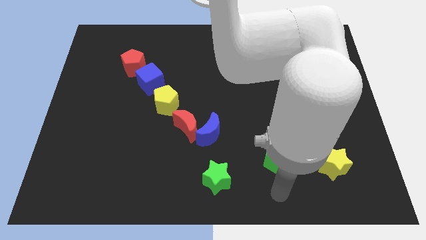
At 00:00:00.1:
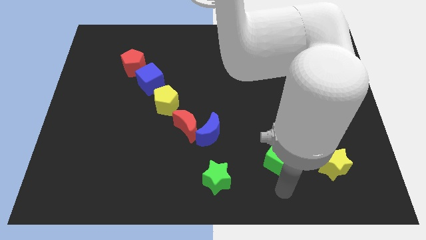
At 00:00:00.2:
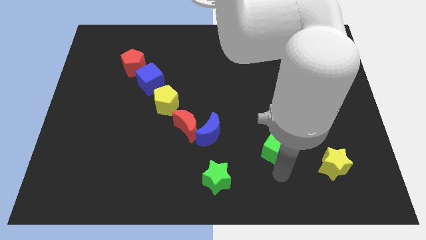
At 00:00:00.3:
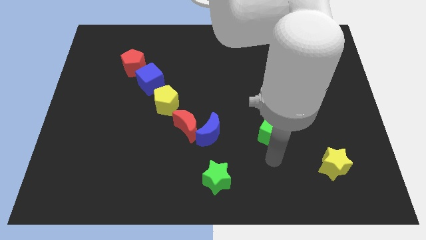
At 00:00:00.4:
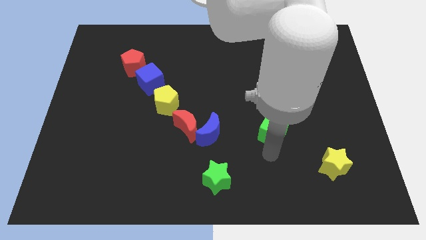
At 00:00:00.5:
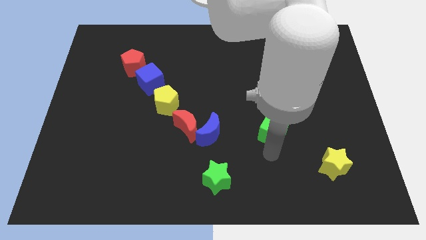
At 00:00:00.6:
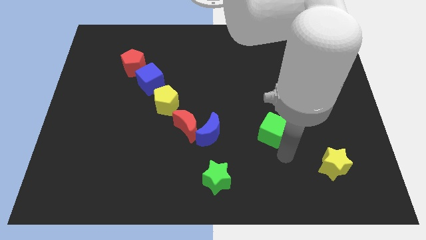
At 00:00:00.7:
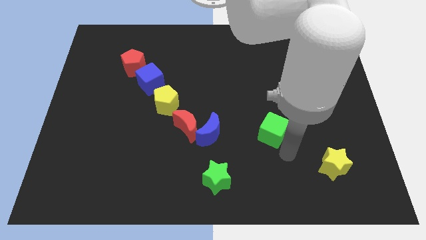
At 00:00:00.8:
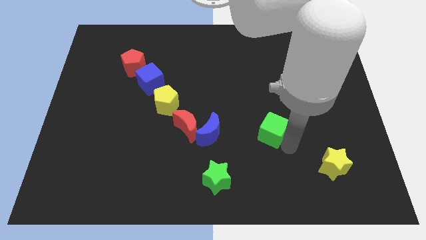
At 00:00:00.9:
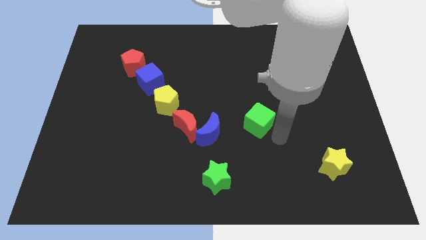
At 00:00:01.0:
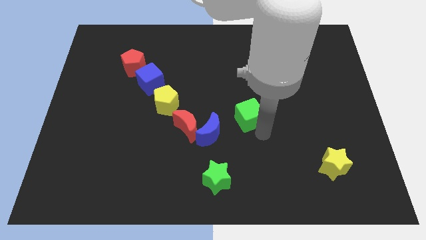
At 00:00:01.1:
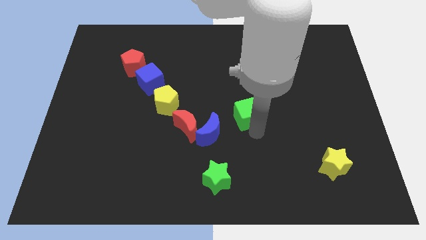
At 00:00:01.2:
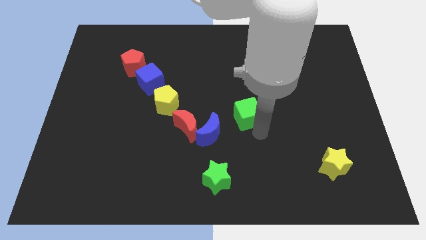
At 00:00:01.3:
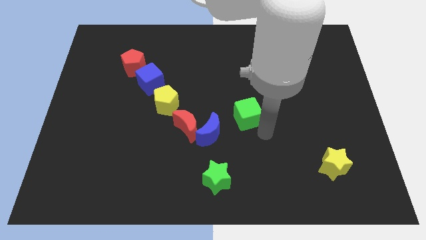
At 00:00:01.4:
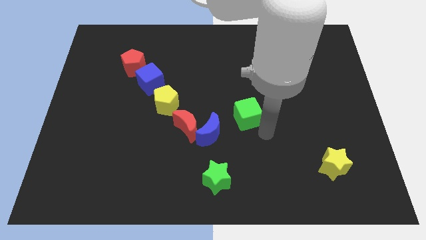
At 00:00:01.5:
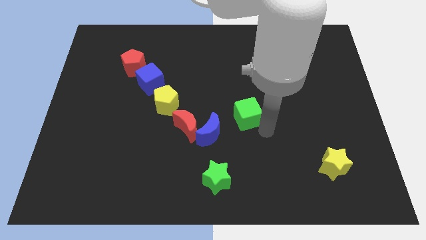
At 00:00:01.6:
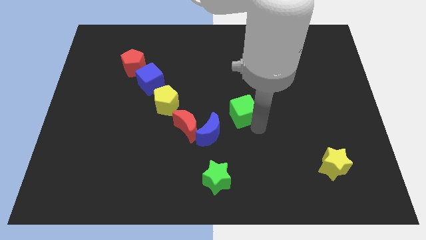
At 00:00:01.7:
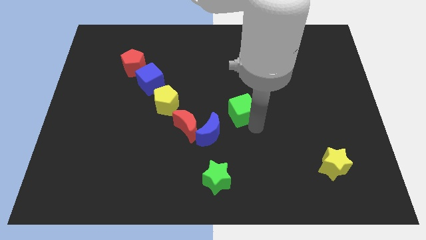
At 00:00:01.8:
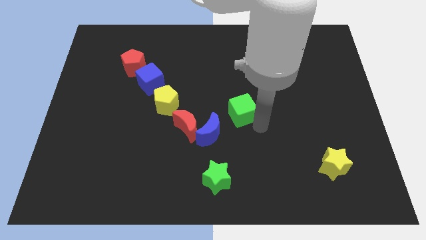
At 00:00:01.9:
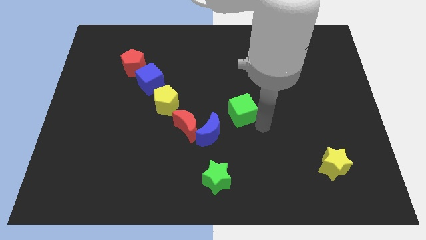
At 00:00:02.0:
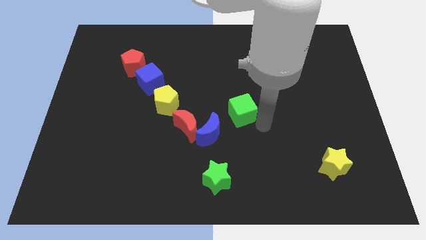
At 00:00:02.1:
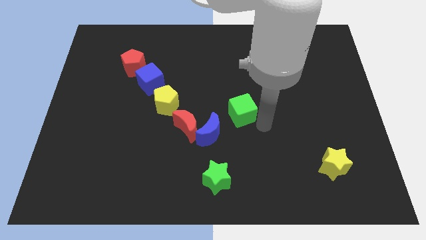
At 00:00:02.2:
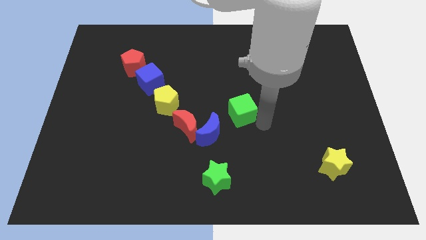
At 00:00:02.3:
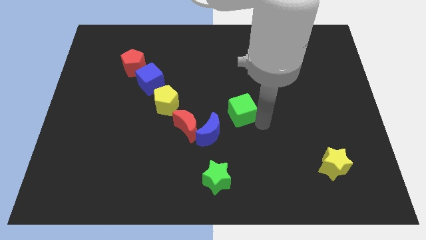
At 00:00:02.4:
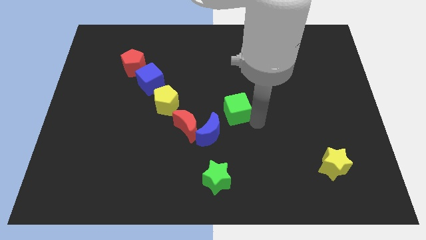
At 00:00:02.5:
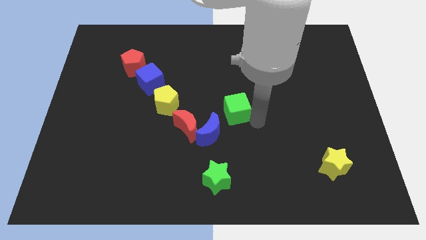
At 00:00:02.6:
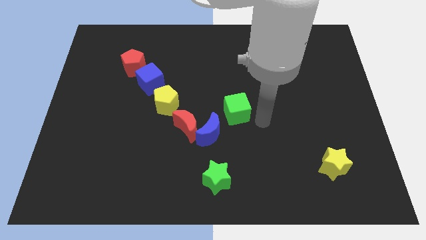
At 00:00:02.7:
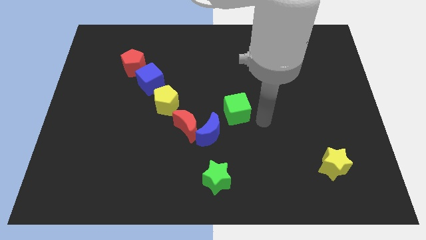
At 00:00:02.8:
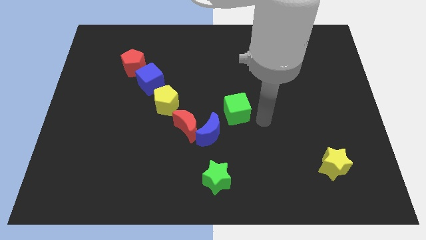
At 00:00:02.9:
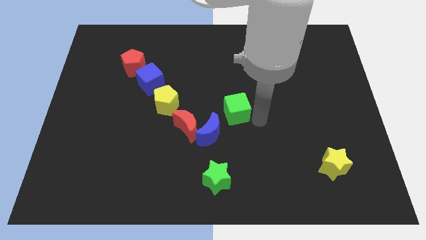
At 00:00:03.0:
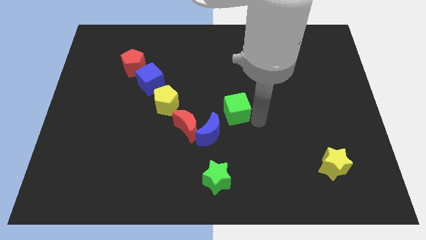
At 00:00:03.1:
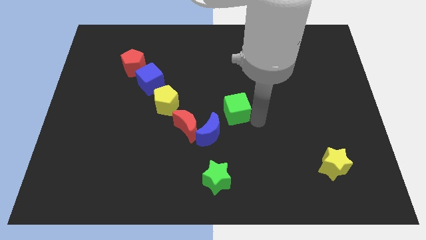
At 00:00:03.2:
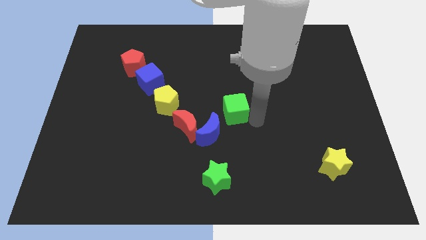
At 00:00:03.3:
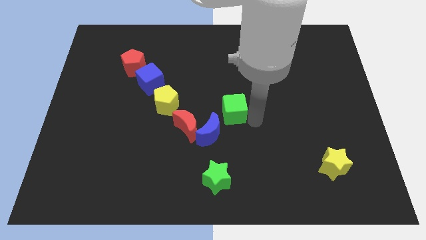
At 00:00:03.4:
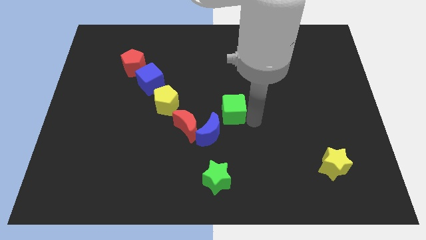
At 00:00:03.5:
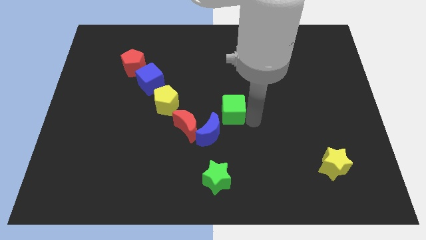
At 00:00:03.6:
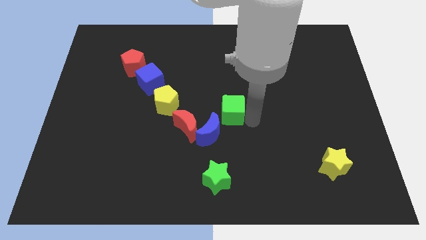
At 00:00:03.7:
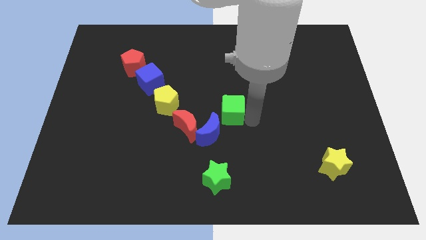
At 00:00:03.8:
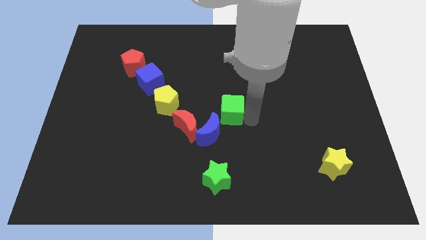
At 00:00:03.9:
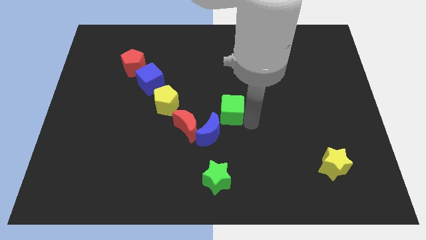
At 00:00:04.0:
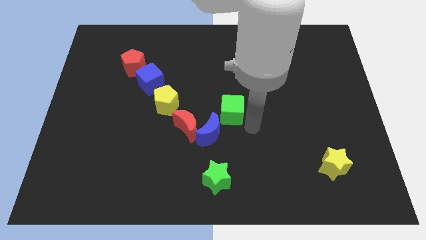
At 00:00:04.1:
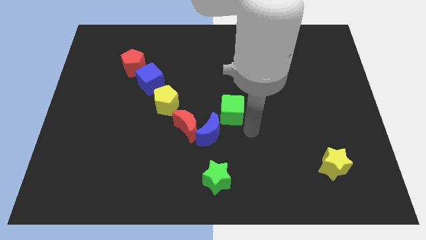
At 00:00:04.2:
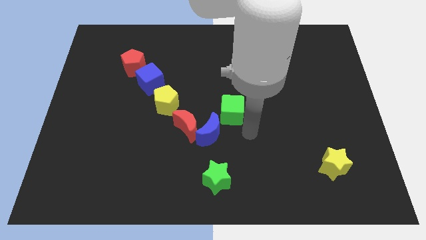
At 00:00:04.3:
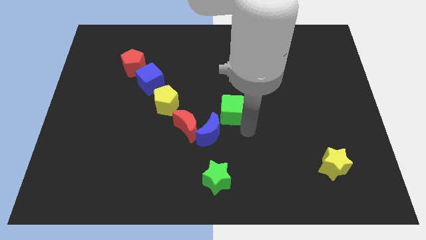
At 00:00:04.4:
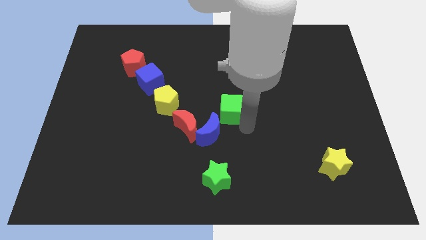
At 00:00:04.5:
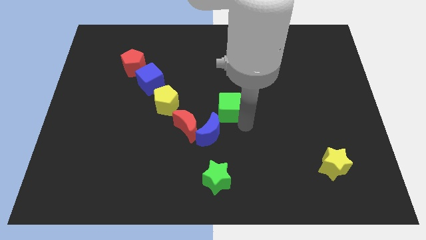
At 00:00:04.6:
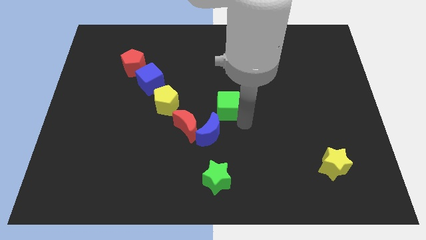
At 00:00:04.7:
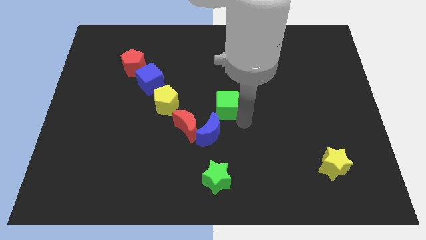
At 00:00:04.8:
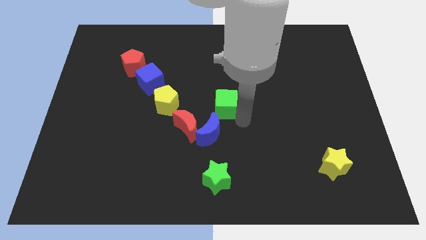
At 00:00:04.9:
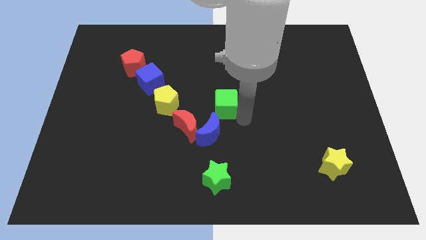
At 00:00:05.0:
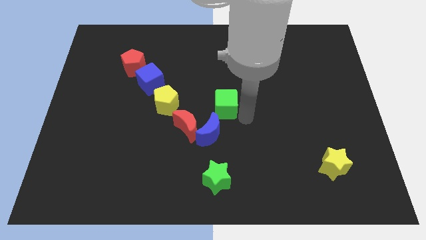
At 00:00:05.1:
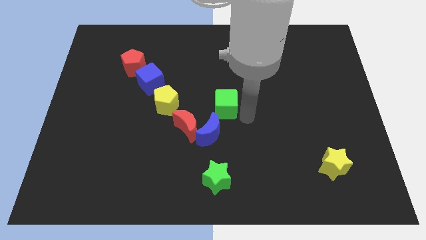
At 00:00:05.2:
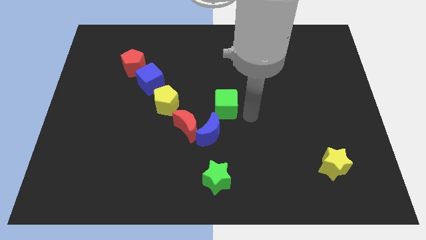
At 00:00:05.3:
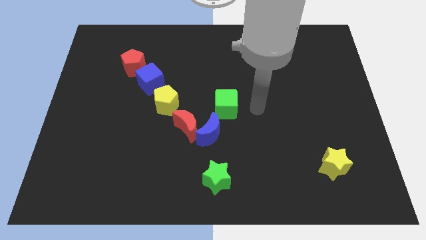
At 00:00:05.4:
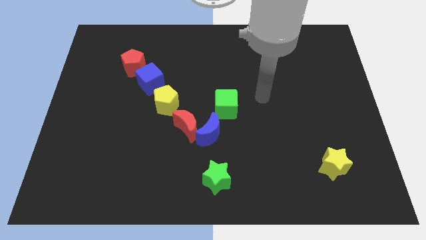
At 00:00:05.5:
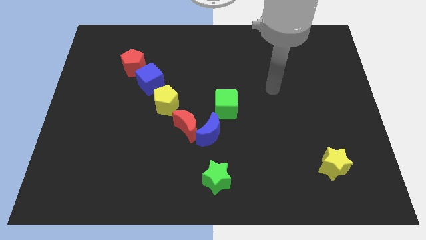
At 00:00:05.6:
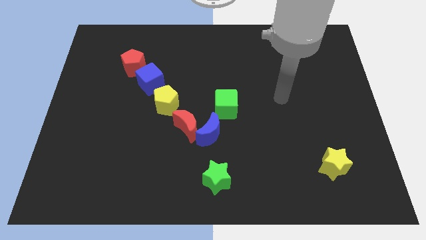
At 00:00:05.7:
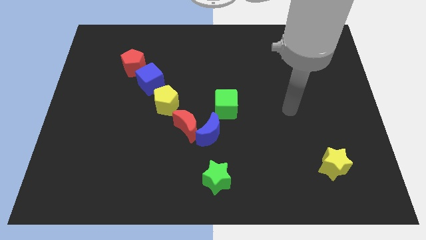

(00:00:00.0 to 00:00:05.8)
place blue cube to one of the end of blue crescent

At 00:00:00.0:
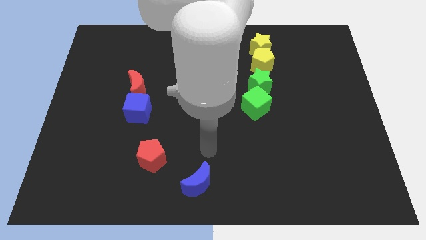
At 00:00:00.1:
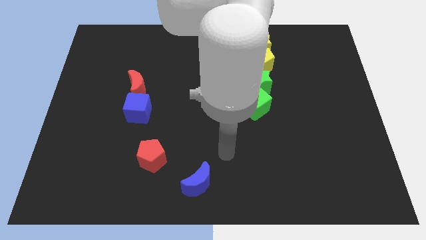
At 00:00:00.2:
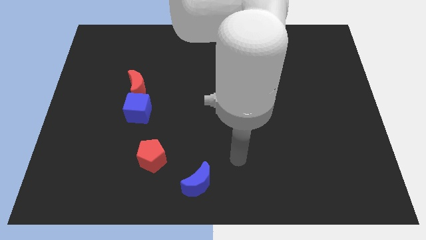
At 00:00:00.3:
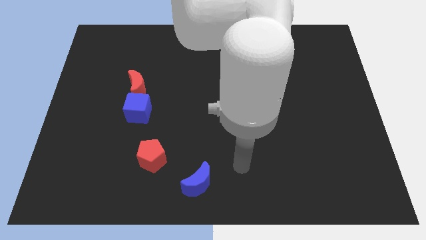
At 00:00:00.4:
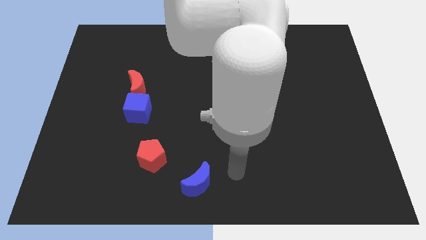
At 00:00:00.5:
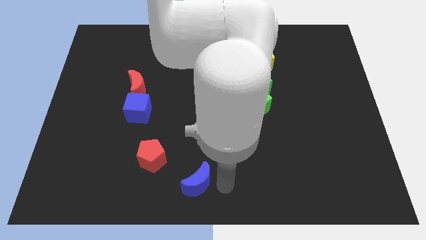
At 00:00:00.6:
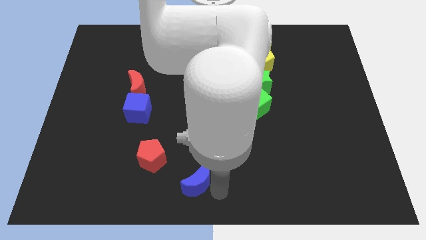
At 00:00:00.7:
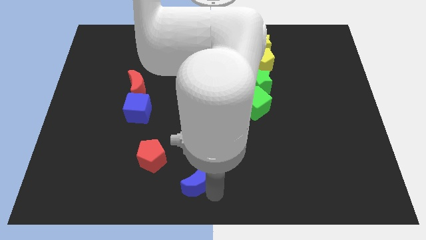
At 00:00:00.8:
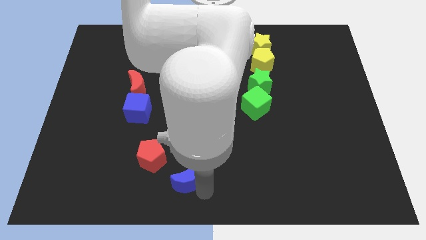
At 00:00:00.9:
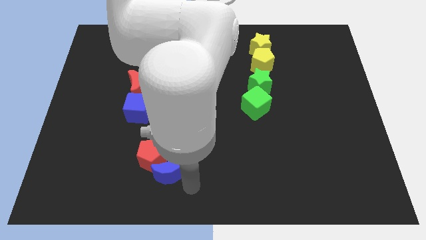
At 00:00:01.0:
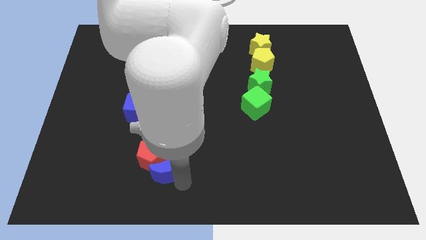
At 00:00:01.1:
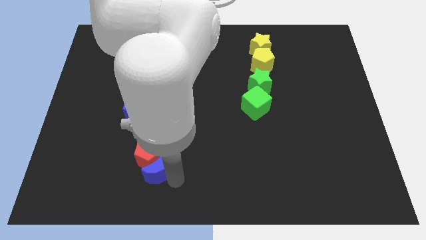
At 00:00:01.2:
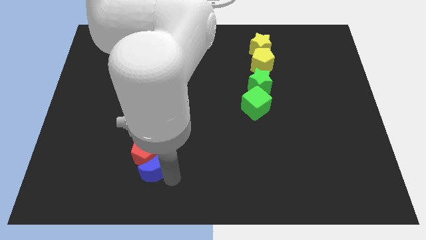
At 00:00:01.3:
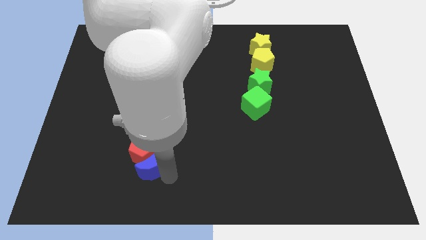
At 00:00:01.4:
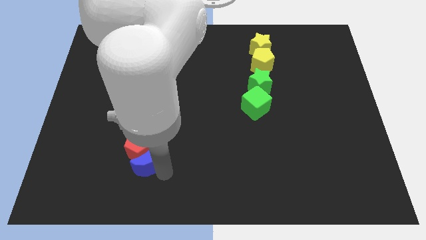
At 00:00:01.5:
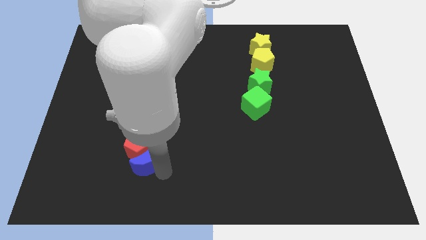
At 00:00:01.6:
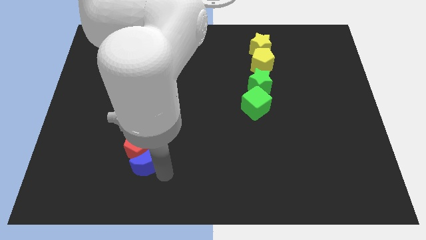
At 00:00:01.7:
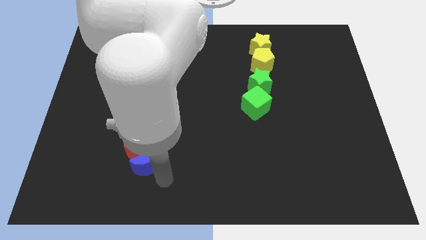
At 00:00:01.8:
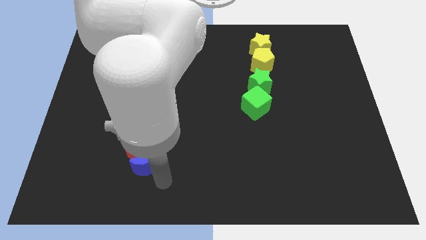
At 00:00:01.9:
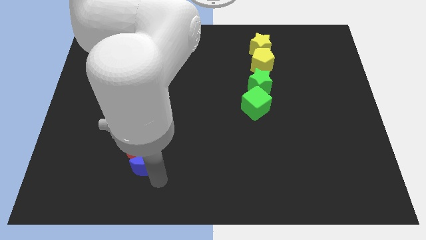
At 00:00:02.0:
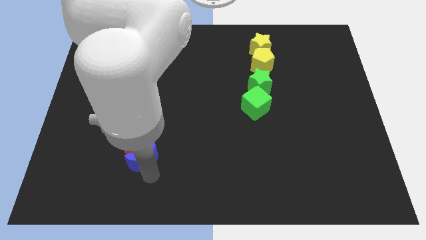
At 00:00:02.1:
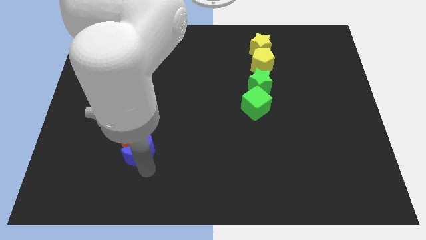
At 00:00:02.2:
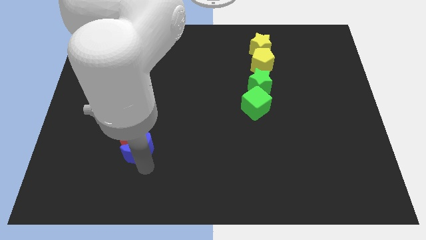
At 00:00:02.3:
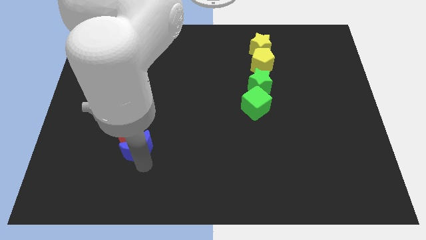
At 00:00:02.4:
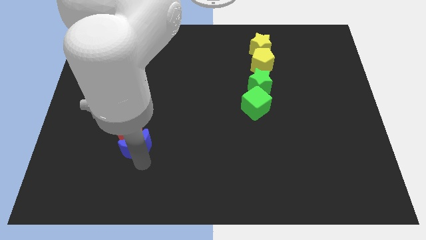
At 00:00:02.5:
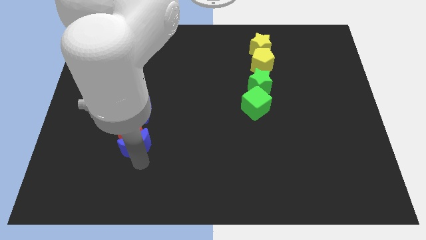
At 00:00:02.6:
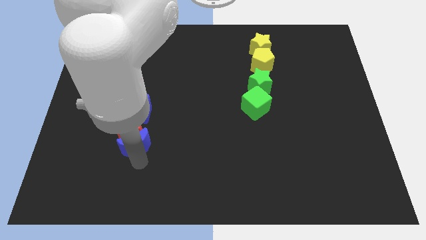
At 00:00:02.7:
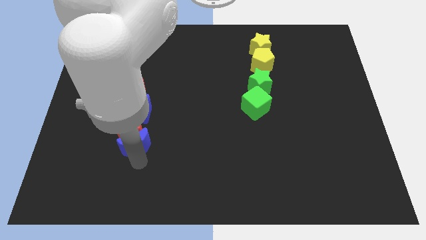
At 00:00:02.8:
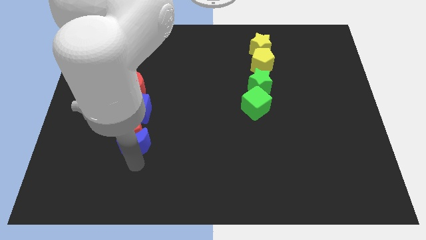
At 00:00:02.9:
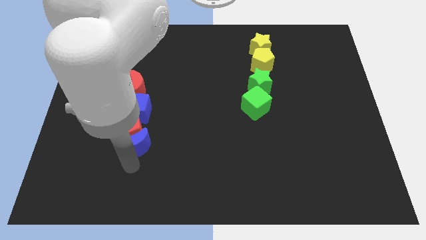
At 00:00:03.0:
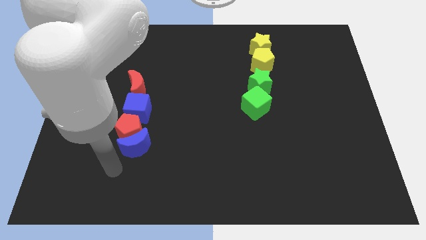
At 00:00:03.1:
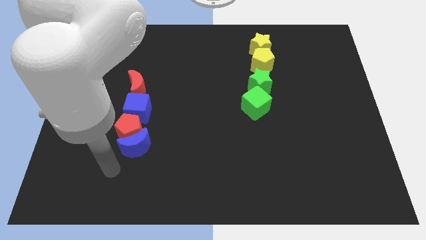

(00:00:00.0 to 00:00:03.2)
line up red and blue blocks vertically

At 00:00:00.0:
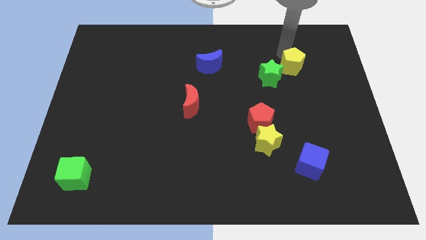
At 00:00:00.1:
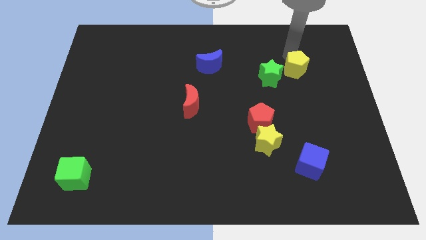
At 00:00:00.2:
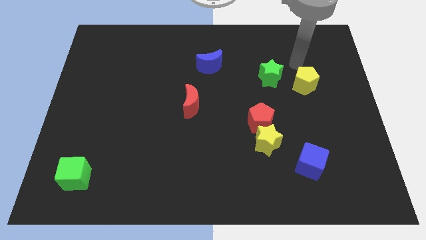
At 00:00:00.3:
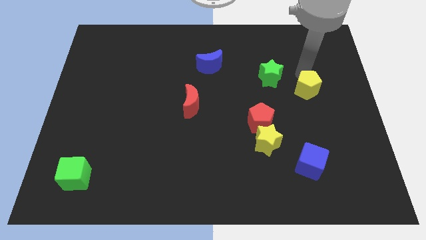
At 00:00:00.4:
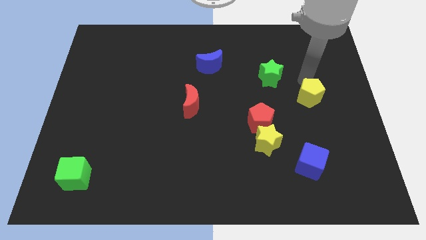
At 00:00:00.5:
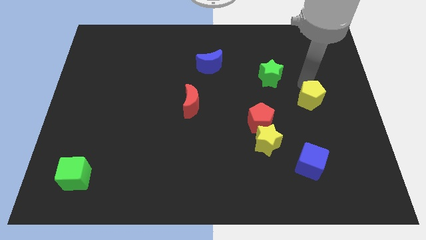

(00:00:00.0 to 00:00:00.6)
drag the yellow pentagon above the blue cube
